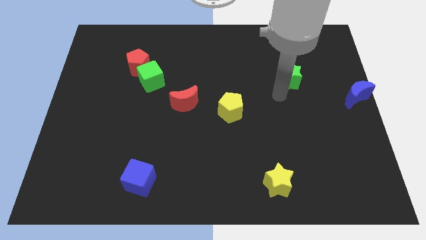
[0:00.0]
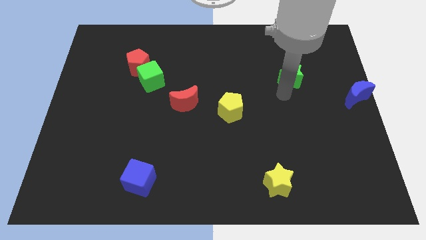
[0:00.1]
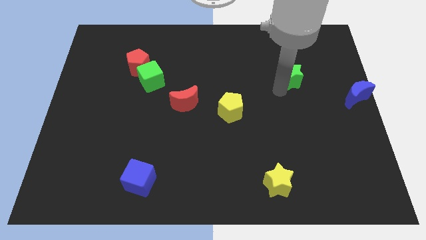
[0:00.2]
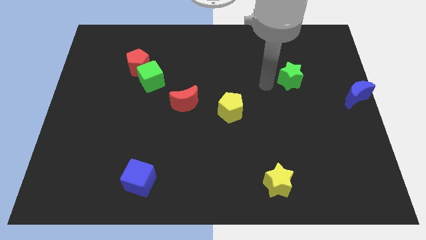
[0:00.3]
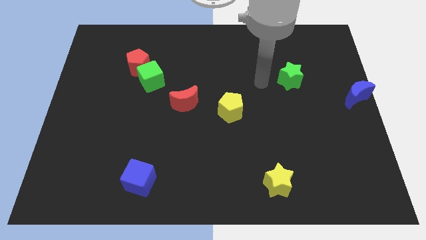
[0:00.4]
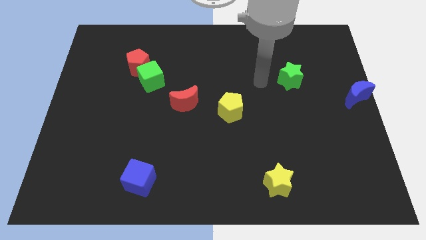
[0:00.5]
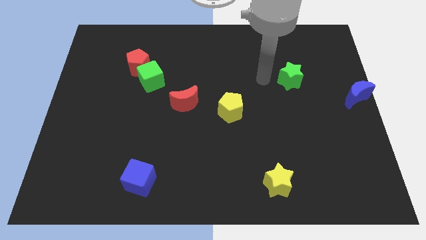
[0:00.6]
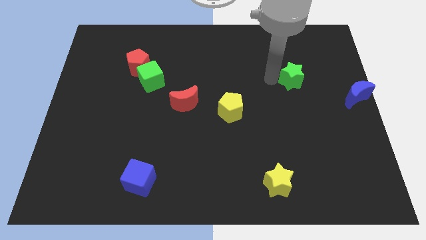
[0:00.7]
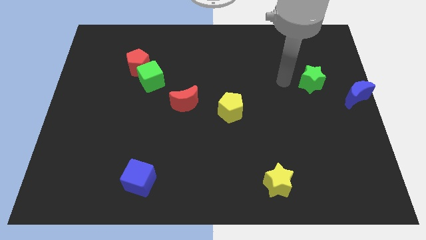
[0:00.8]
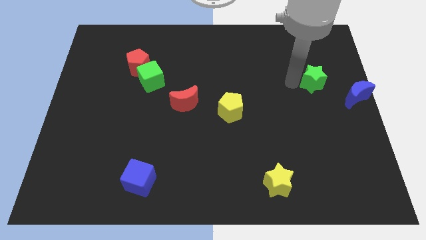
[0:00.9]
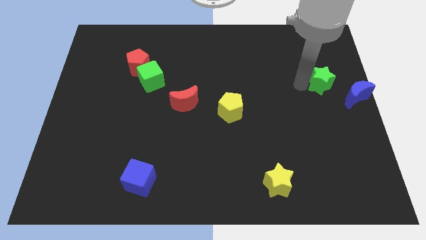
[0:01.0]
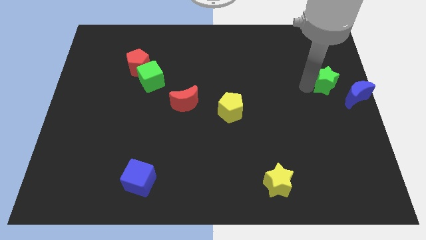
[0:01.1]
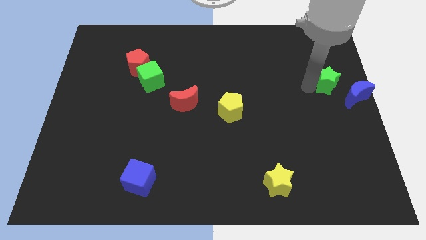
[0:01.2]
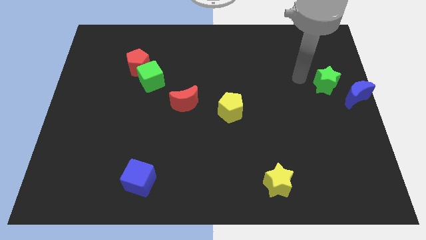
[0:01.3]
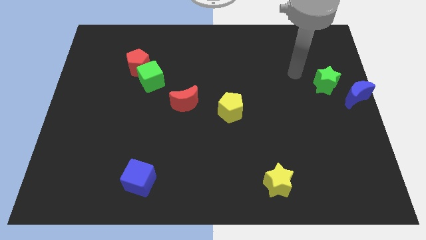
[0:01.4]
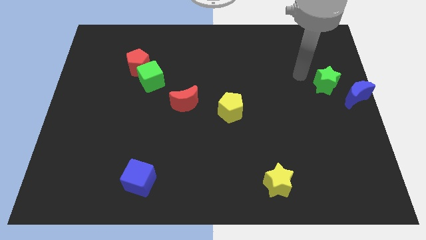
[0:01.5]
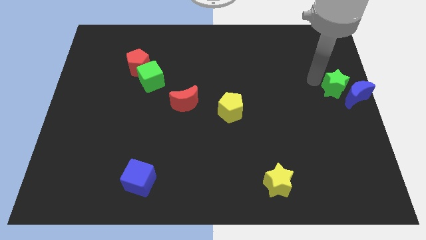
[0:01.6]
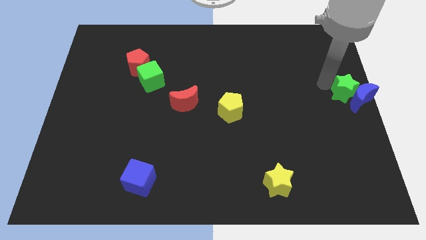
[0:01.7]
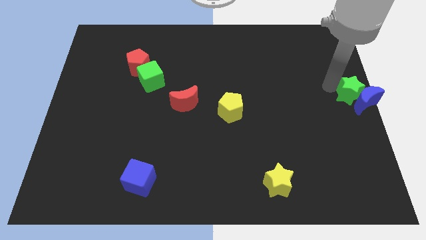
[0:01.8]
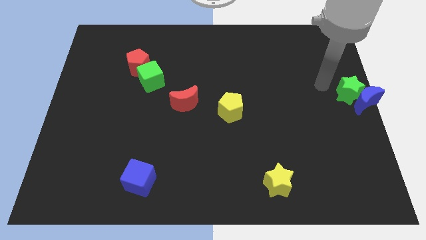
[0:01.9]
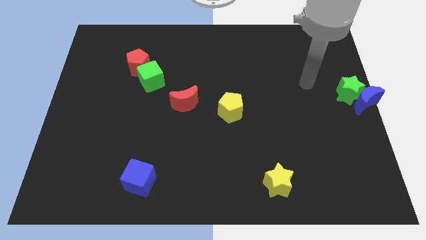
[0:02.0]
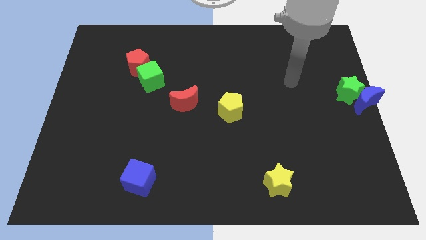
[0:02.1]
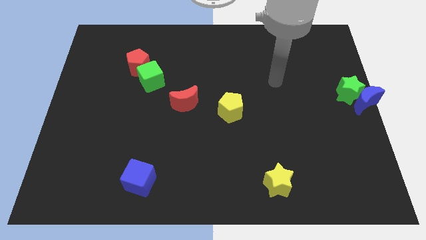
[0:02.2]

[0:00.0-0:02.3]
push the green star into blue moon

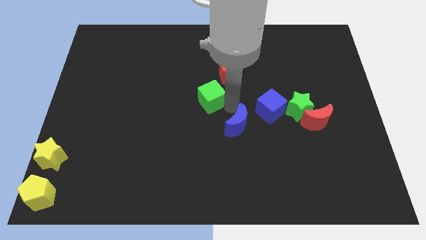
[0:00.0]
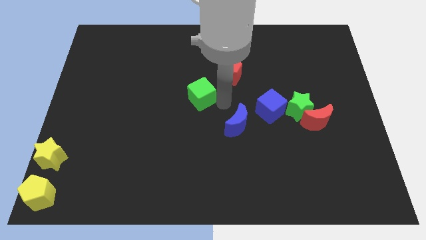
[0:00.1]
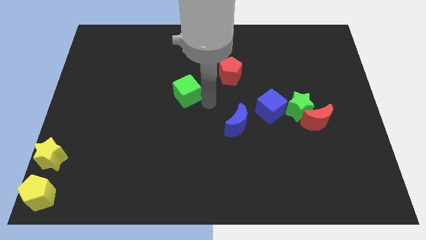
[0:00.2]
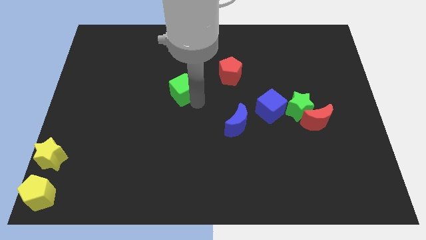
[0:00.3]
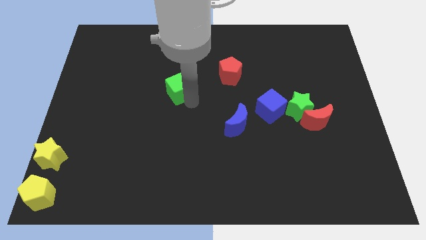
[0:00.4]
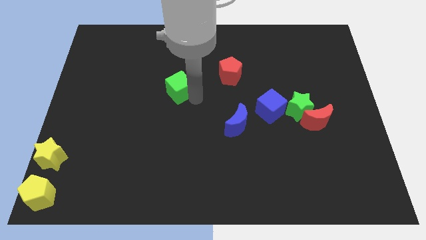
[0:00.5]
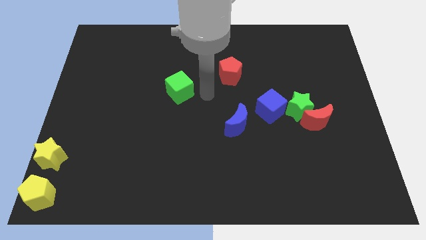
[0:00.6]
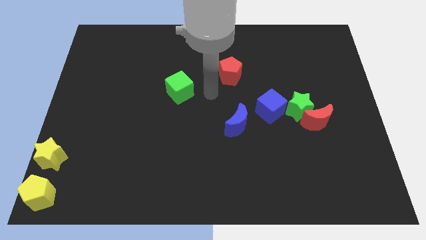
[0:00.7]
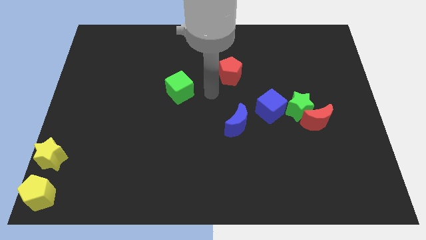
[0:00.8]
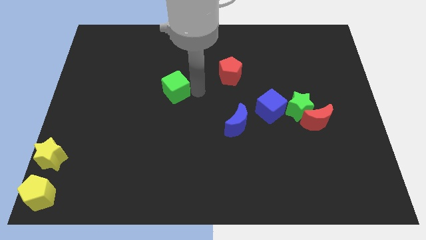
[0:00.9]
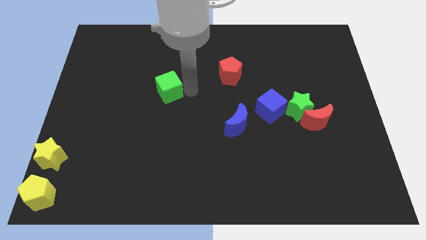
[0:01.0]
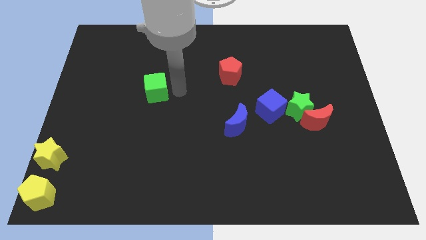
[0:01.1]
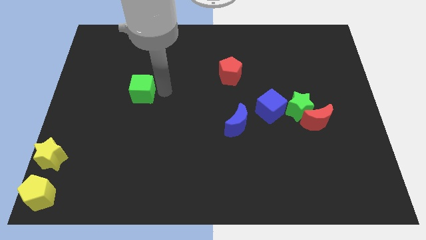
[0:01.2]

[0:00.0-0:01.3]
drag the green cube to the left

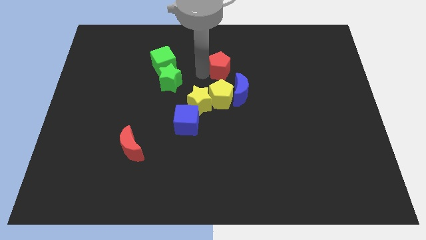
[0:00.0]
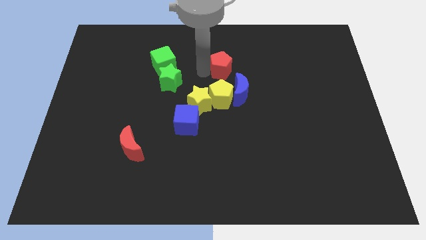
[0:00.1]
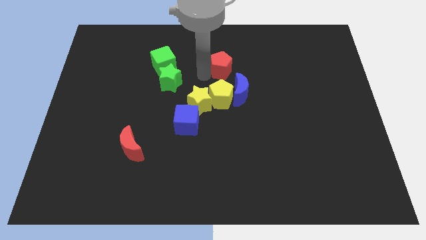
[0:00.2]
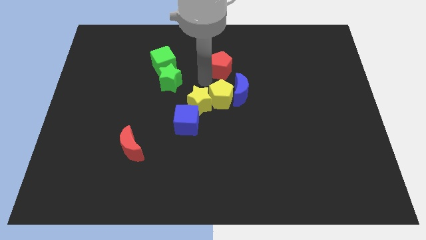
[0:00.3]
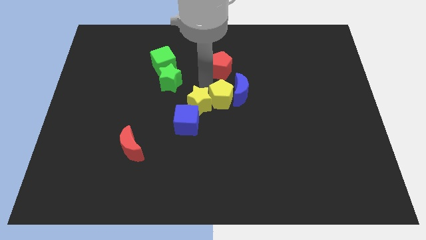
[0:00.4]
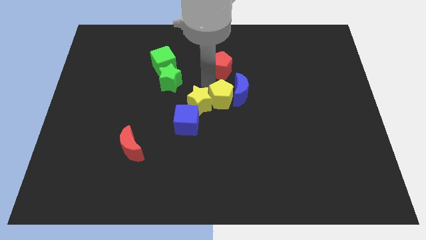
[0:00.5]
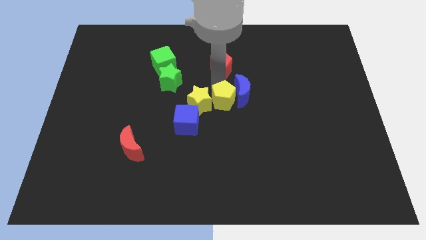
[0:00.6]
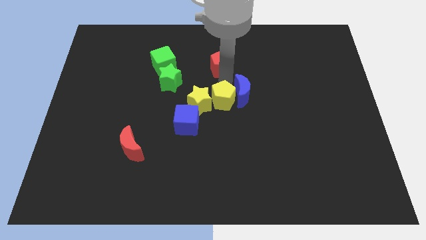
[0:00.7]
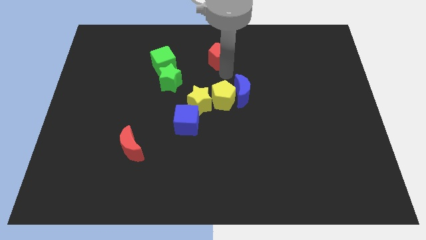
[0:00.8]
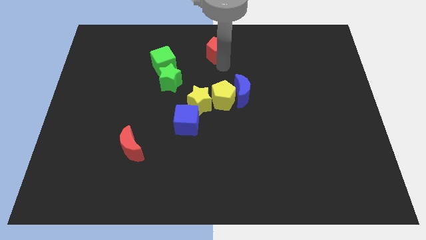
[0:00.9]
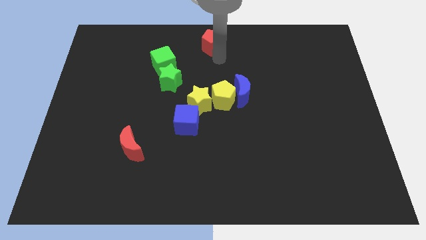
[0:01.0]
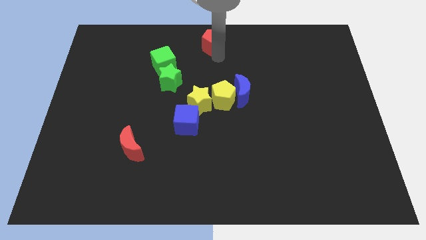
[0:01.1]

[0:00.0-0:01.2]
push the red pentagon towards the top center of the board

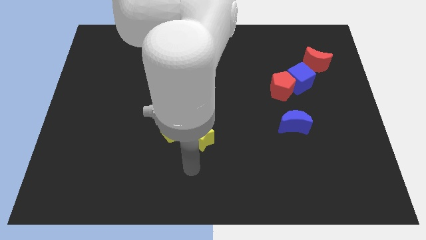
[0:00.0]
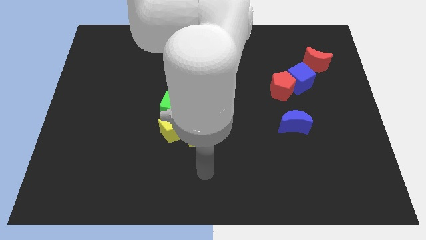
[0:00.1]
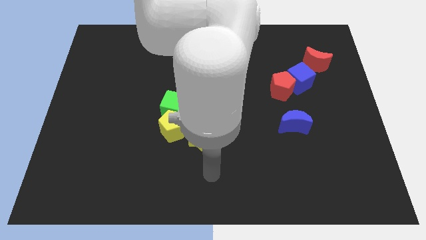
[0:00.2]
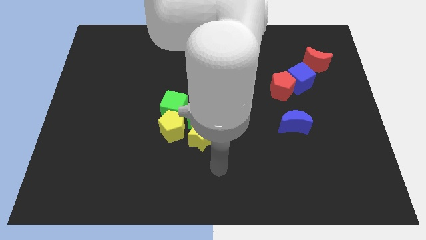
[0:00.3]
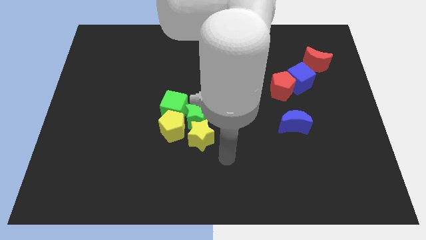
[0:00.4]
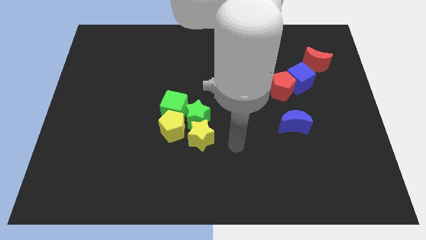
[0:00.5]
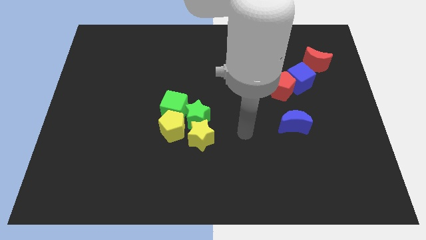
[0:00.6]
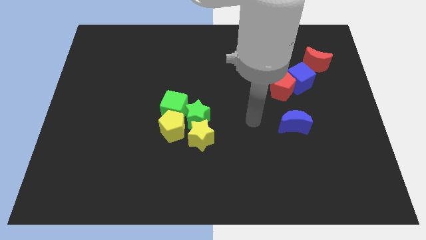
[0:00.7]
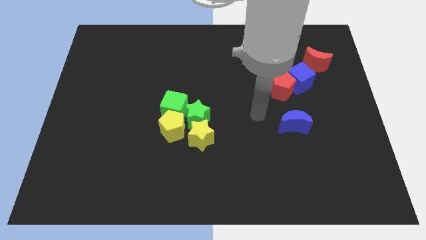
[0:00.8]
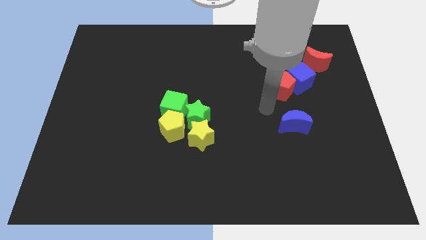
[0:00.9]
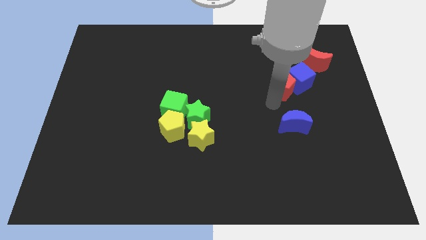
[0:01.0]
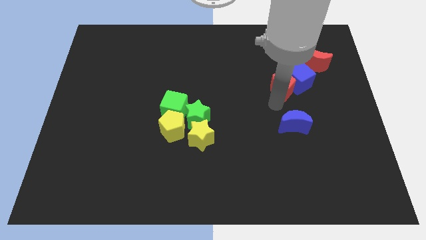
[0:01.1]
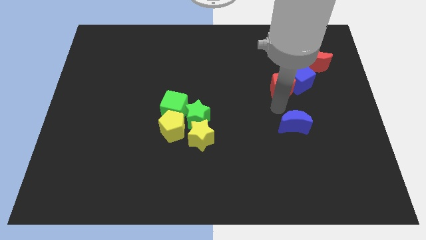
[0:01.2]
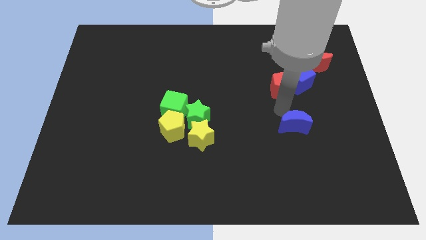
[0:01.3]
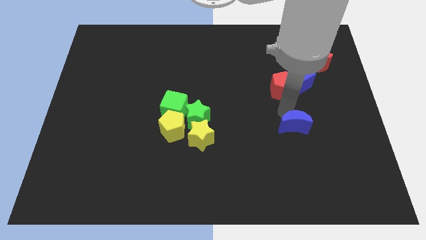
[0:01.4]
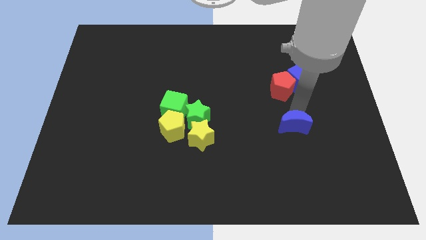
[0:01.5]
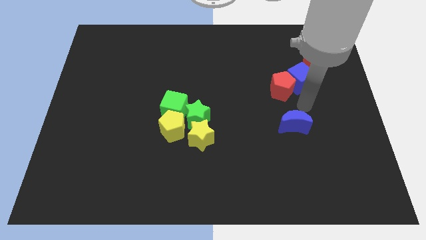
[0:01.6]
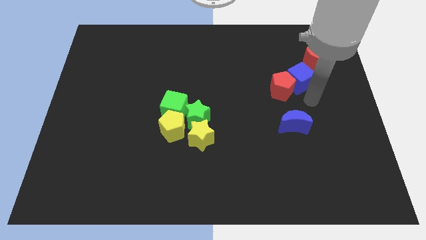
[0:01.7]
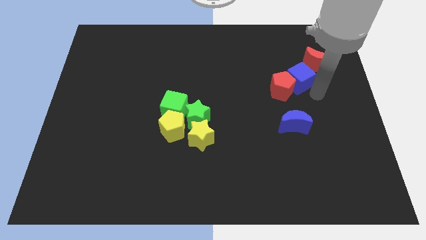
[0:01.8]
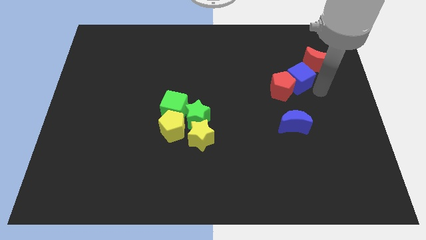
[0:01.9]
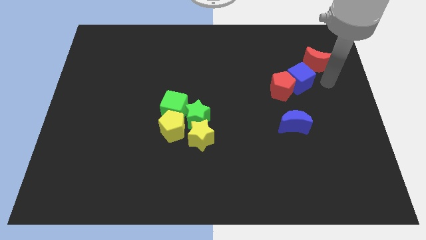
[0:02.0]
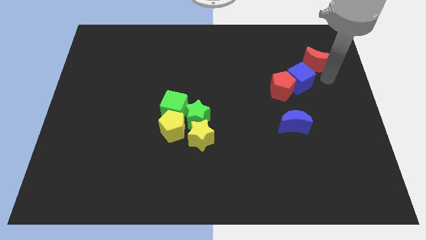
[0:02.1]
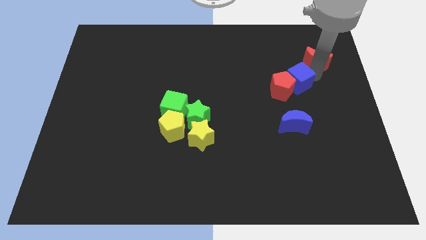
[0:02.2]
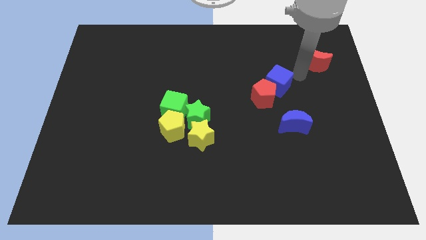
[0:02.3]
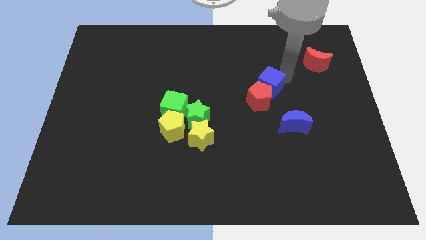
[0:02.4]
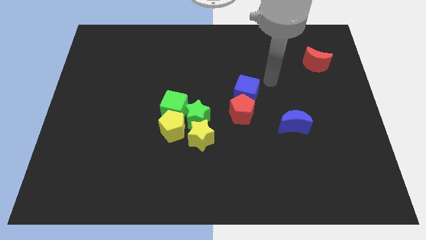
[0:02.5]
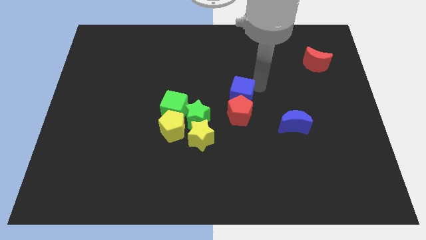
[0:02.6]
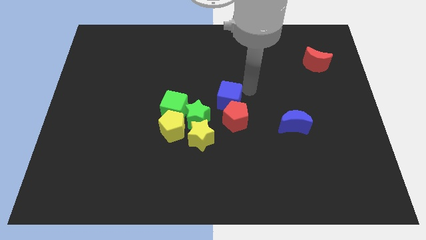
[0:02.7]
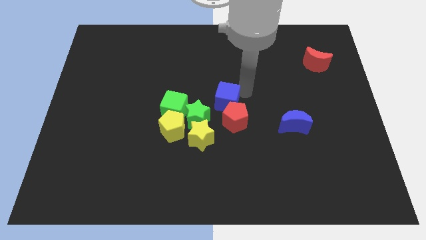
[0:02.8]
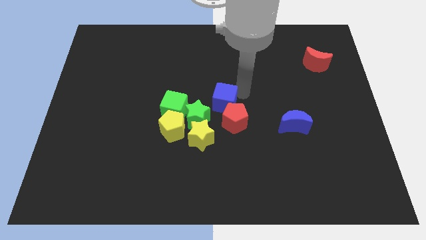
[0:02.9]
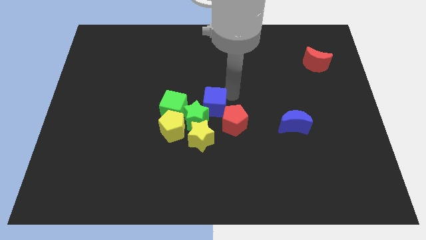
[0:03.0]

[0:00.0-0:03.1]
push the blue cube and red pentagon into the group of blocks at the center of the board

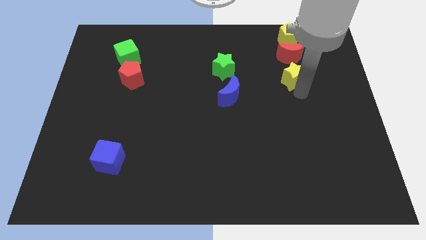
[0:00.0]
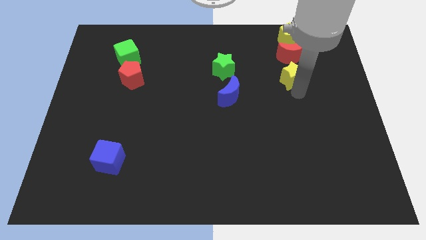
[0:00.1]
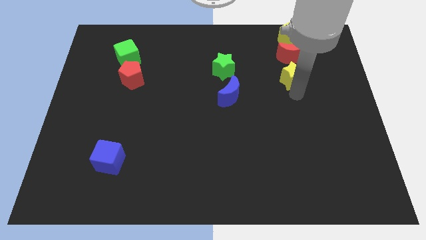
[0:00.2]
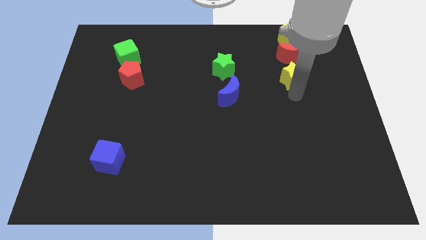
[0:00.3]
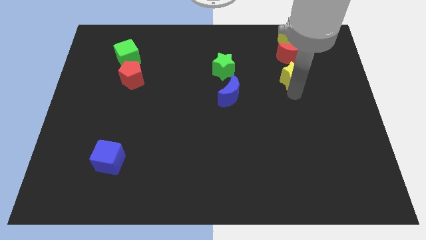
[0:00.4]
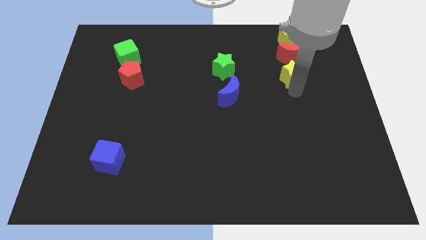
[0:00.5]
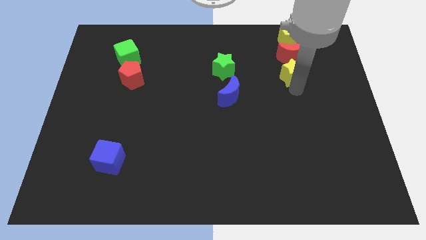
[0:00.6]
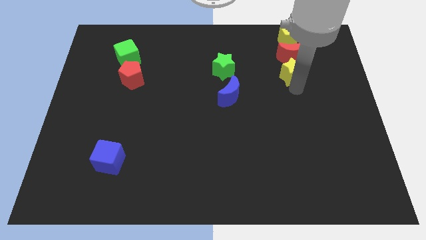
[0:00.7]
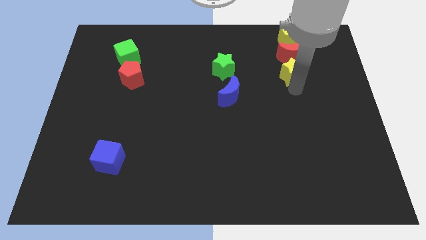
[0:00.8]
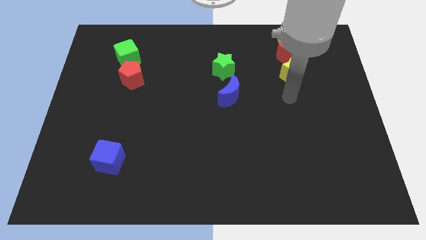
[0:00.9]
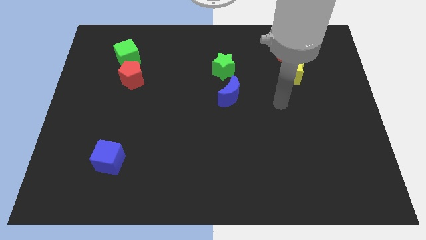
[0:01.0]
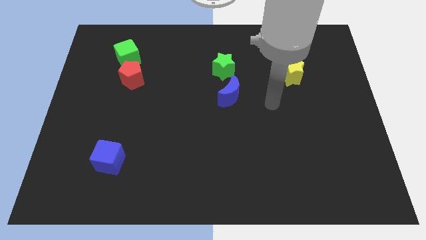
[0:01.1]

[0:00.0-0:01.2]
move yellow star into red moon
